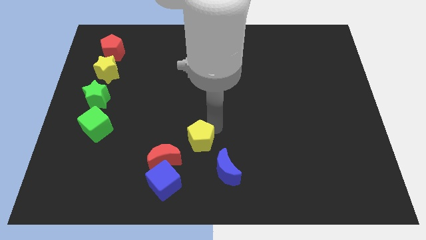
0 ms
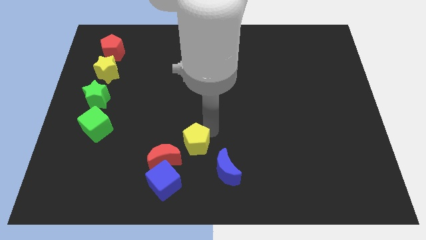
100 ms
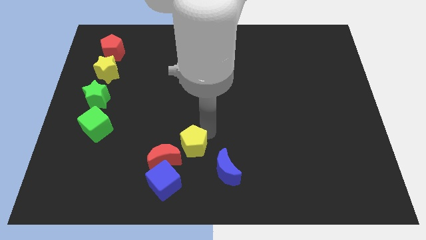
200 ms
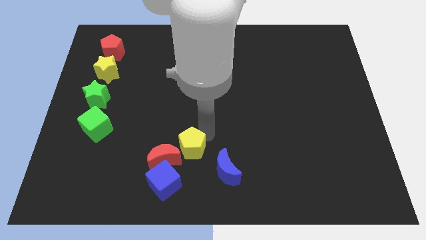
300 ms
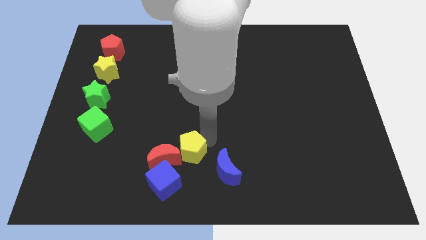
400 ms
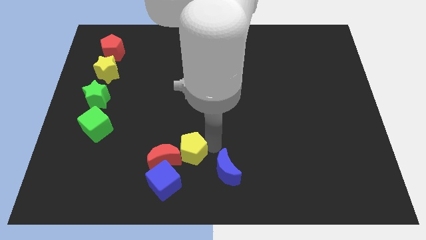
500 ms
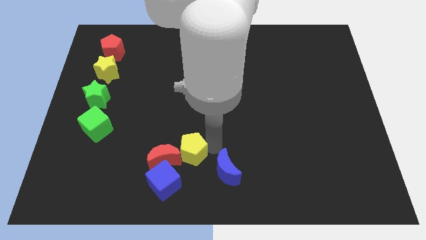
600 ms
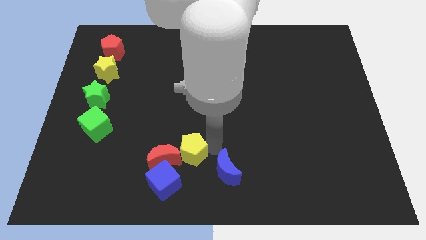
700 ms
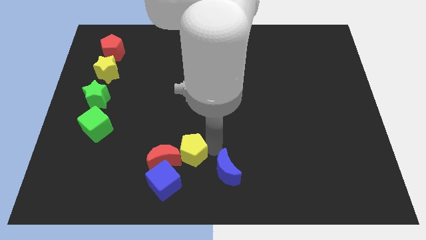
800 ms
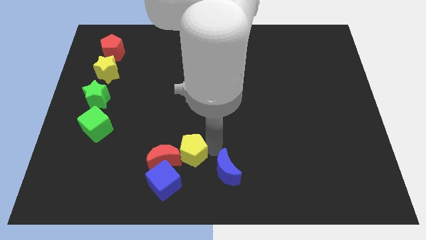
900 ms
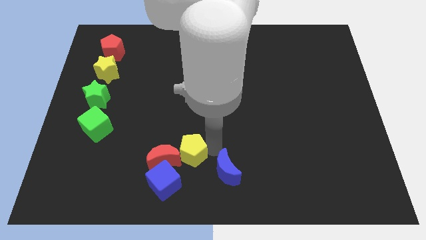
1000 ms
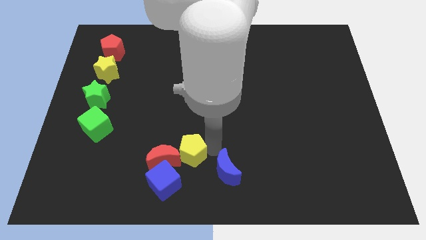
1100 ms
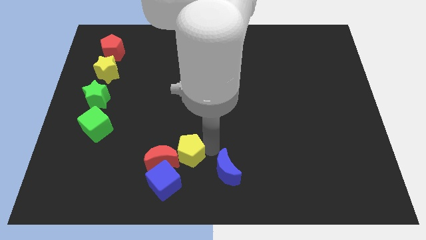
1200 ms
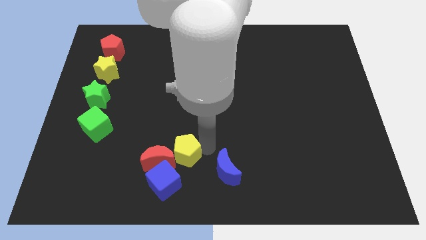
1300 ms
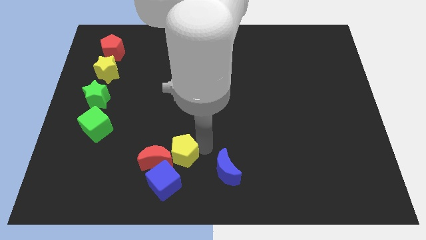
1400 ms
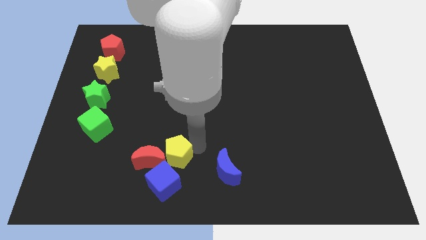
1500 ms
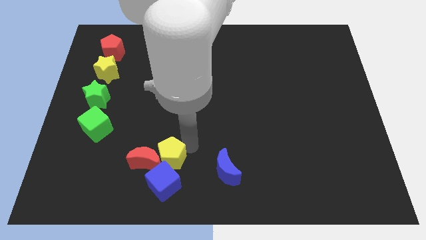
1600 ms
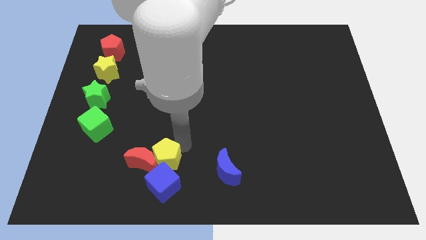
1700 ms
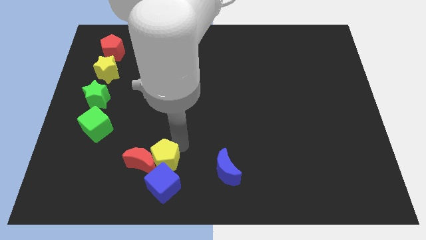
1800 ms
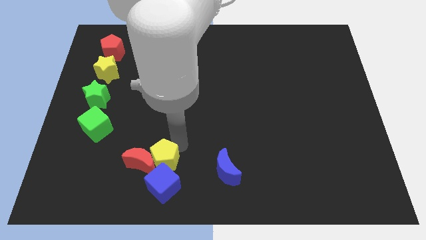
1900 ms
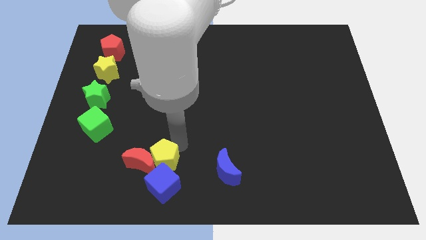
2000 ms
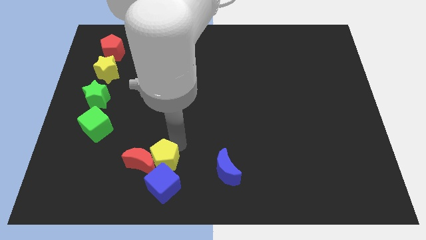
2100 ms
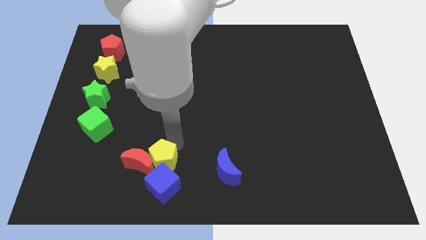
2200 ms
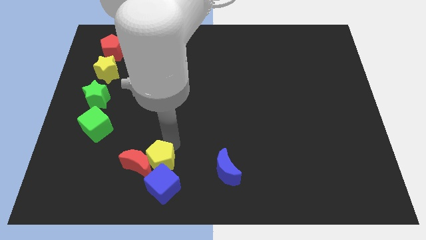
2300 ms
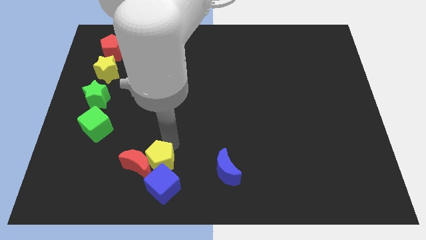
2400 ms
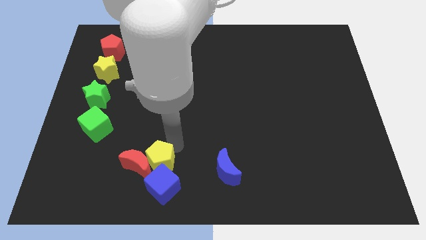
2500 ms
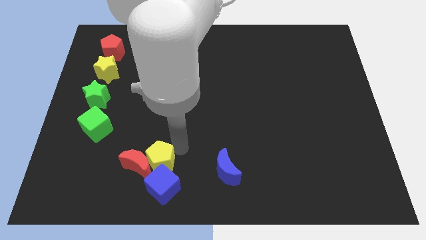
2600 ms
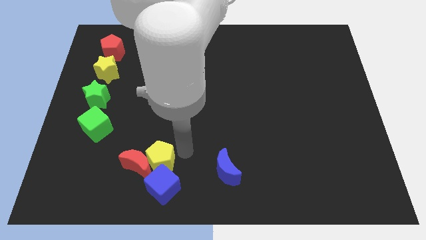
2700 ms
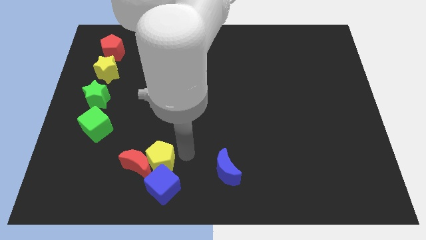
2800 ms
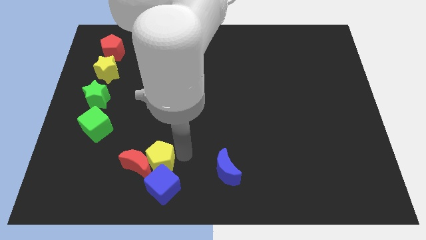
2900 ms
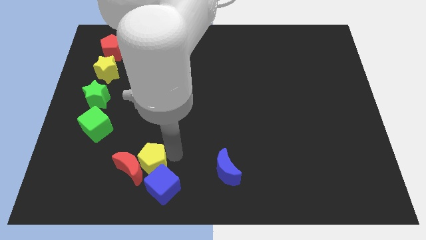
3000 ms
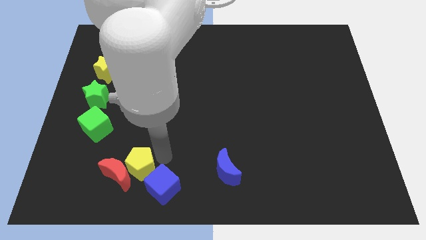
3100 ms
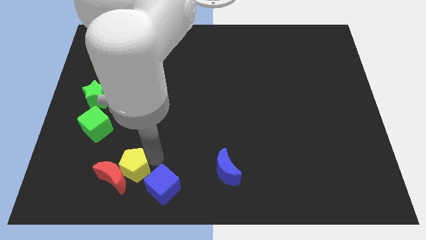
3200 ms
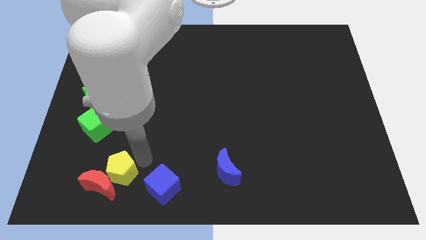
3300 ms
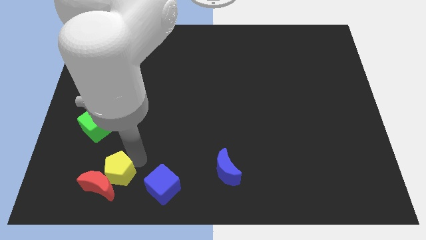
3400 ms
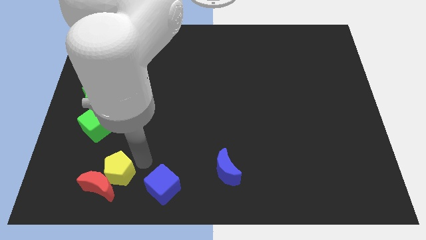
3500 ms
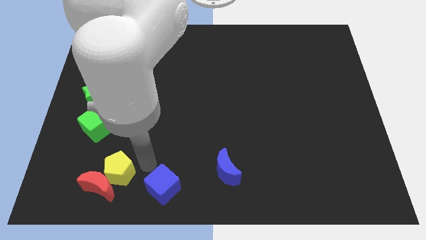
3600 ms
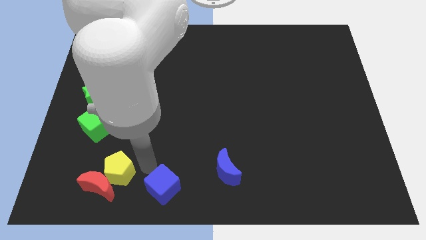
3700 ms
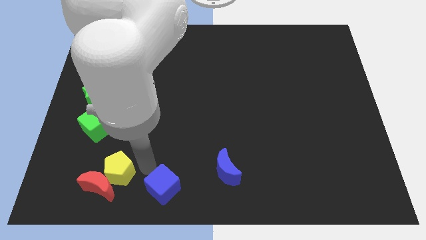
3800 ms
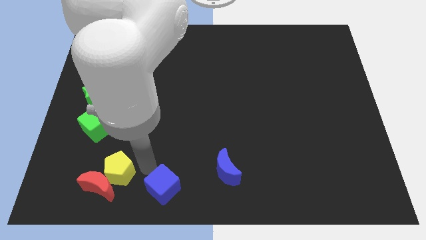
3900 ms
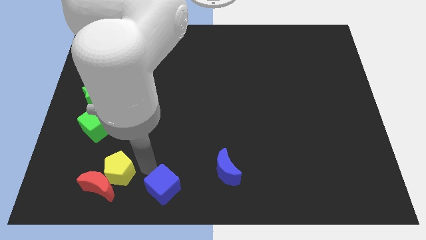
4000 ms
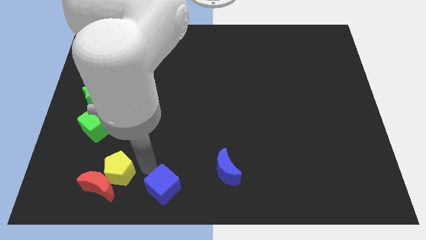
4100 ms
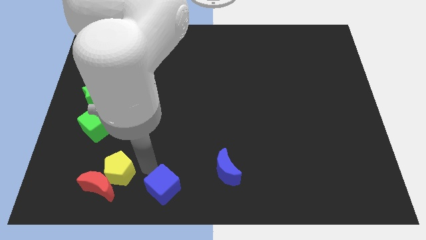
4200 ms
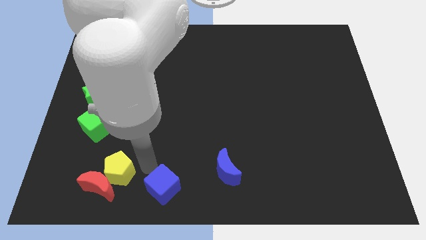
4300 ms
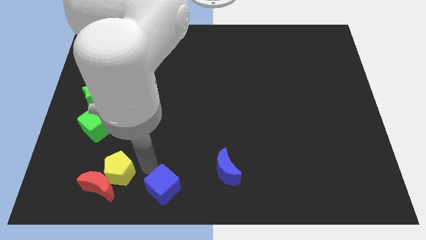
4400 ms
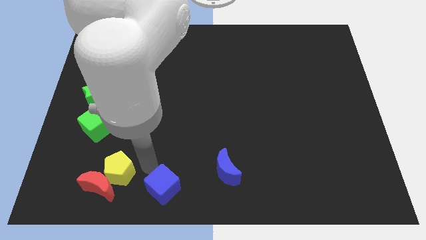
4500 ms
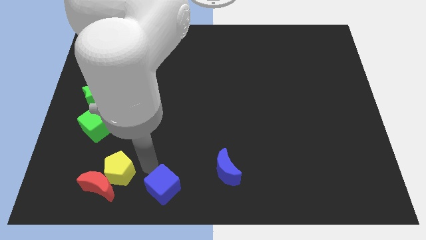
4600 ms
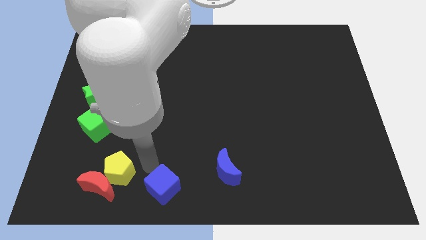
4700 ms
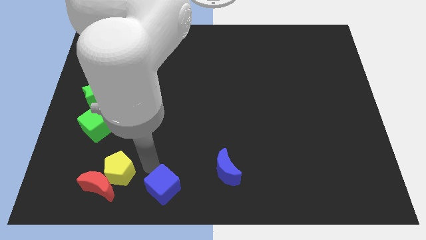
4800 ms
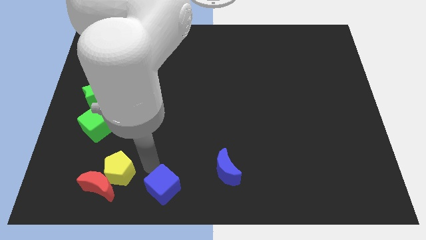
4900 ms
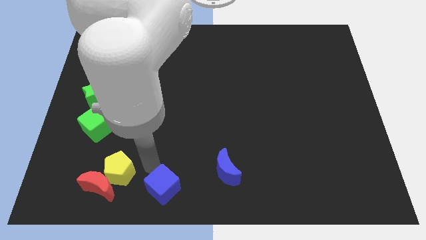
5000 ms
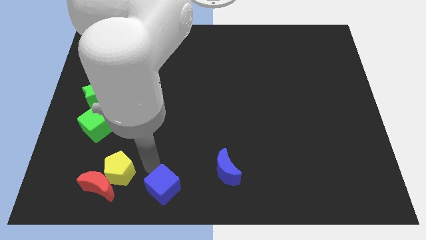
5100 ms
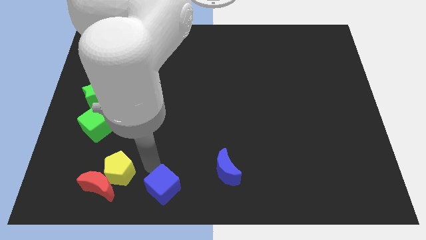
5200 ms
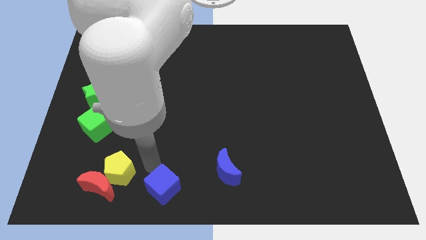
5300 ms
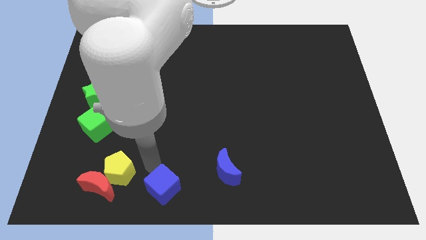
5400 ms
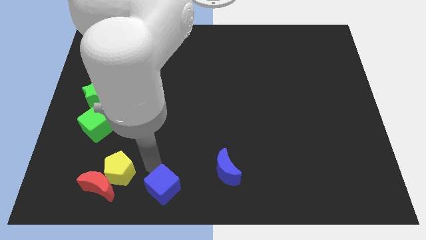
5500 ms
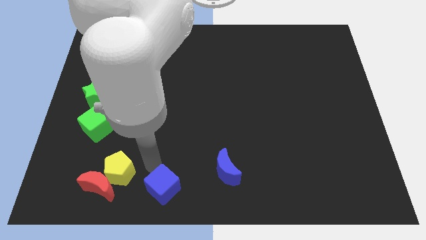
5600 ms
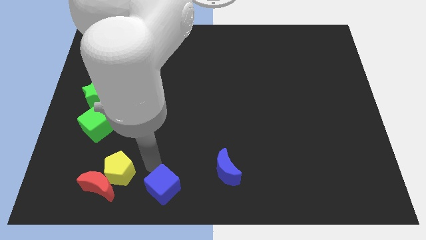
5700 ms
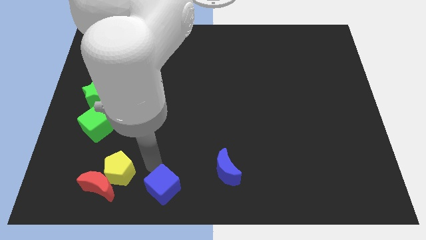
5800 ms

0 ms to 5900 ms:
push the yellow pentagon and red moon towards the bottom left side of the board

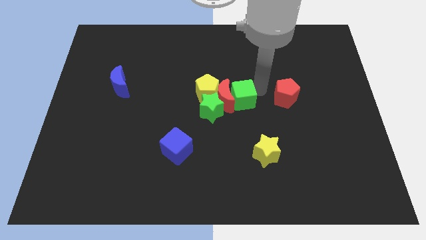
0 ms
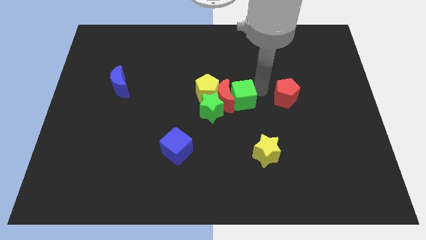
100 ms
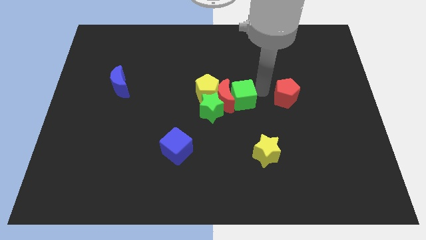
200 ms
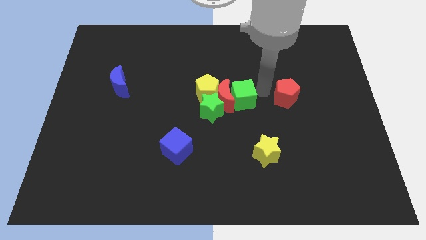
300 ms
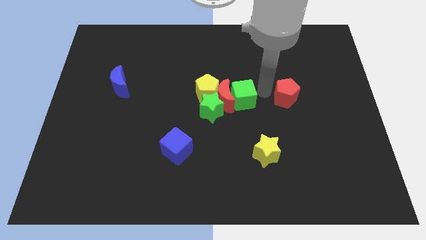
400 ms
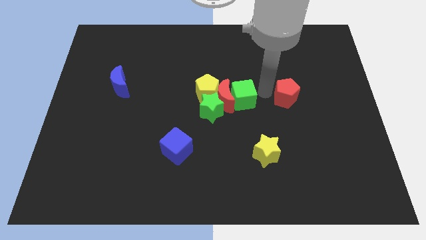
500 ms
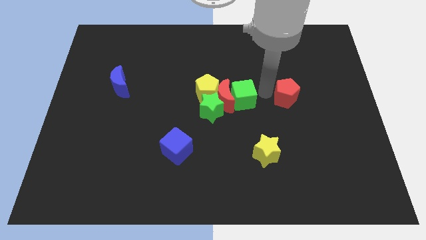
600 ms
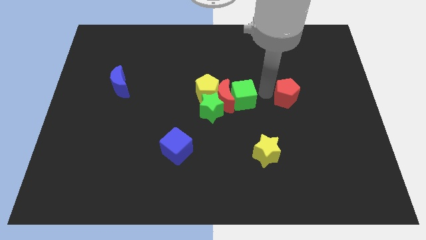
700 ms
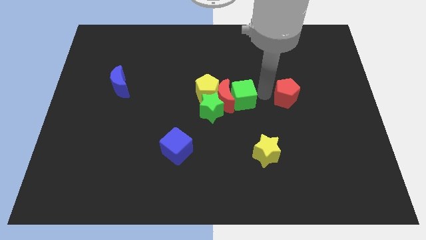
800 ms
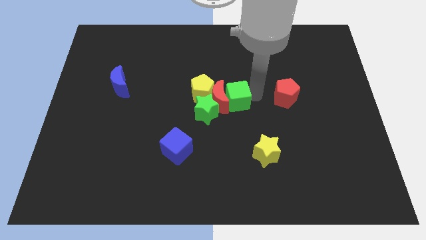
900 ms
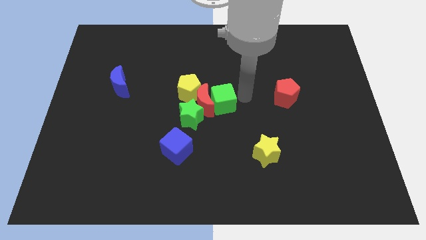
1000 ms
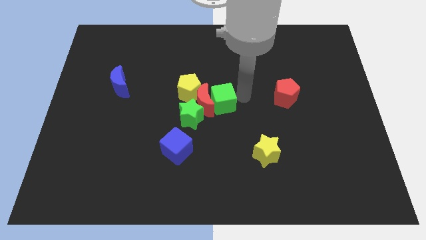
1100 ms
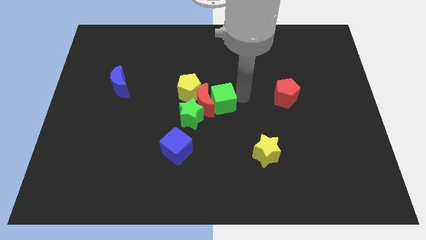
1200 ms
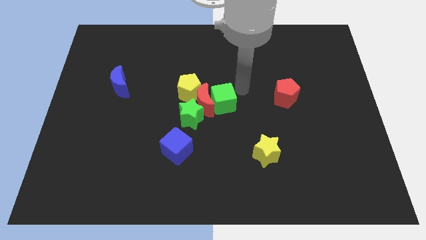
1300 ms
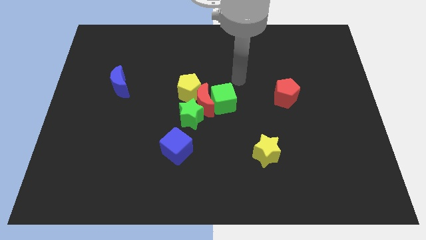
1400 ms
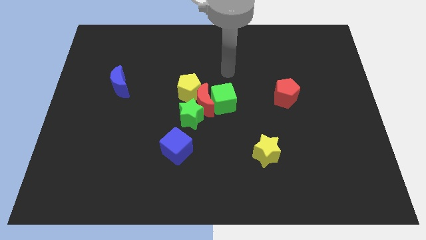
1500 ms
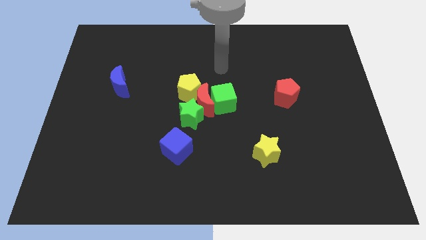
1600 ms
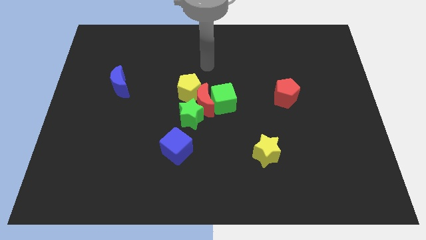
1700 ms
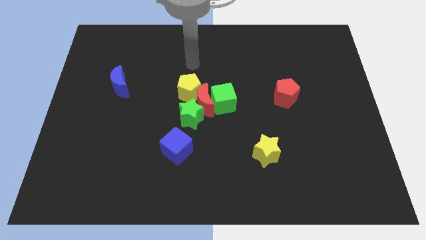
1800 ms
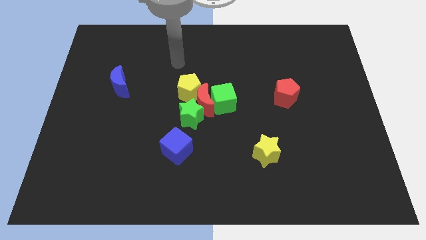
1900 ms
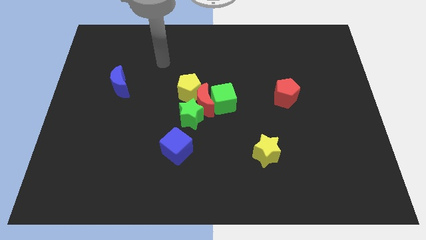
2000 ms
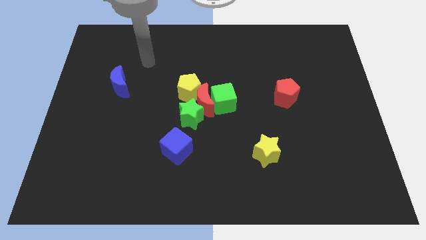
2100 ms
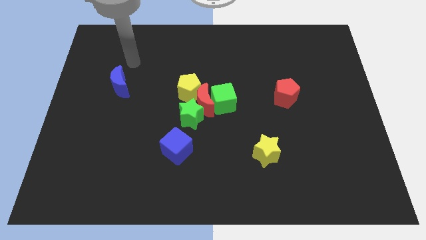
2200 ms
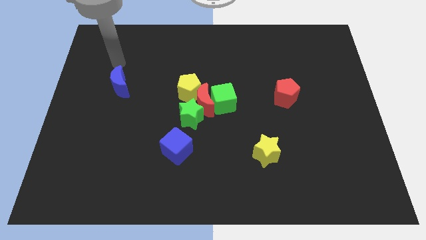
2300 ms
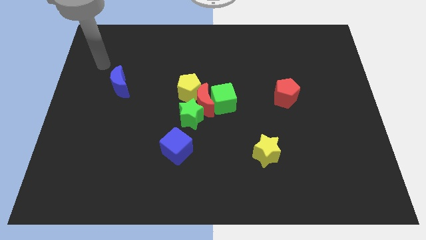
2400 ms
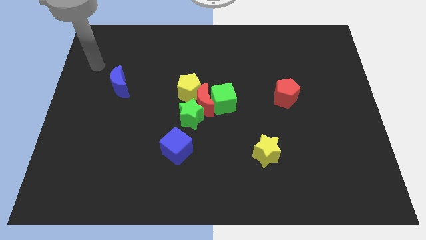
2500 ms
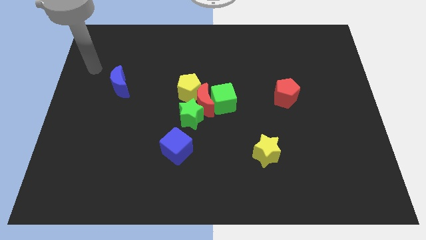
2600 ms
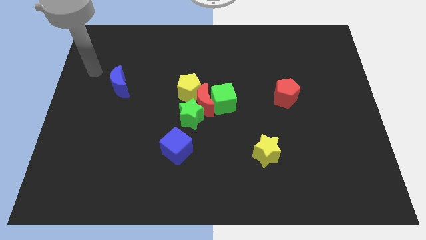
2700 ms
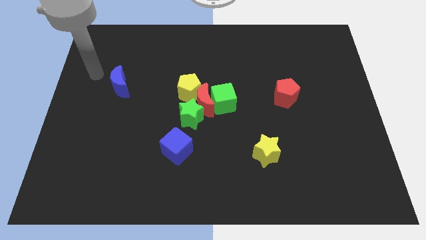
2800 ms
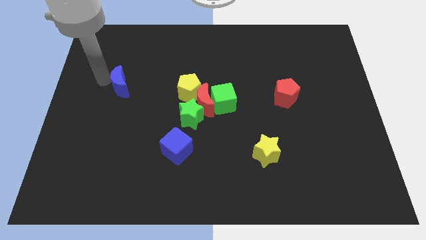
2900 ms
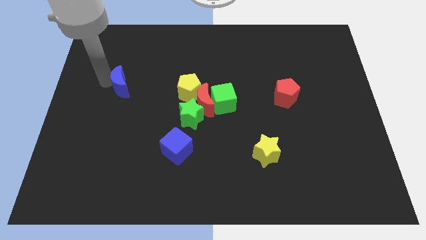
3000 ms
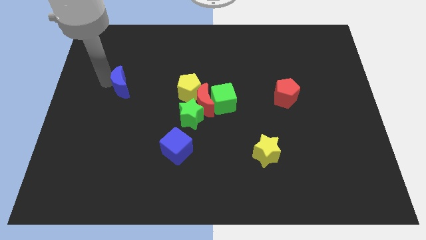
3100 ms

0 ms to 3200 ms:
move the group of blocks slightly to the left
